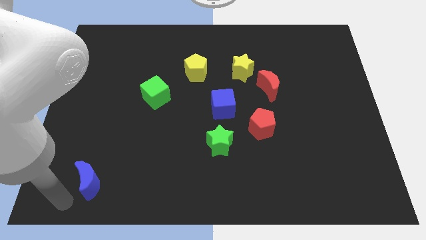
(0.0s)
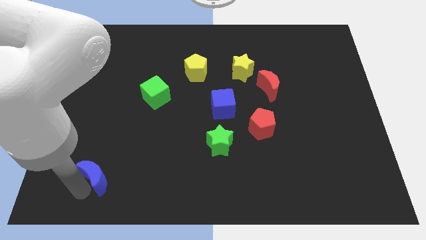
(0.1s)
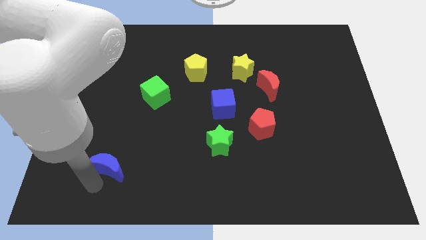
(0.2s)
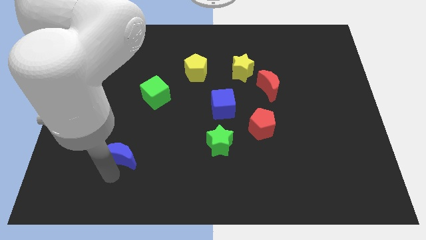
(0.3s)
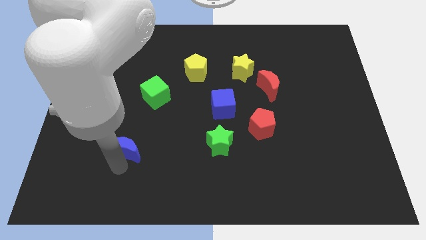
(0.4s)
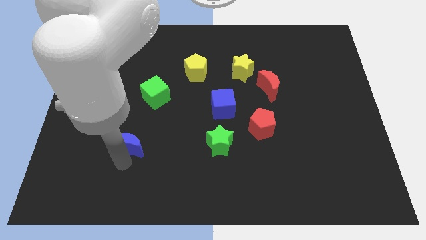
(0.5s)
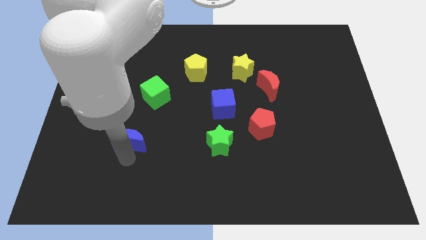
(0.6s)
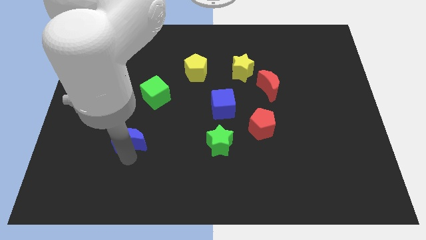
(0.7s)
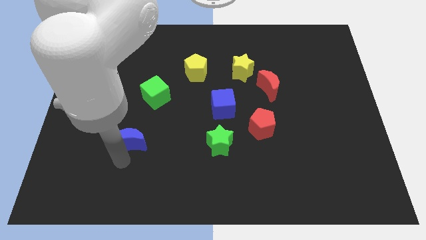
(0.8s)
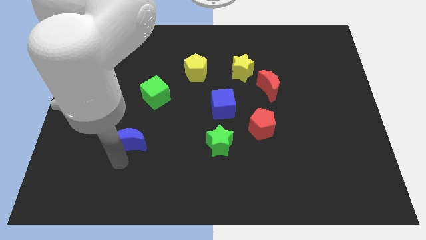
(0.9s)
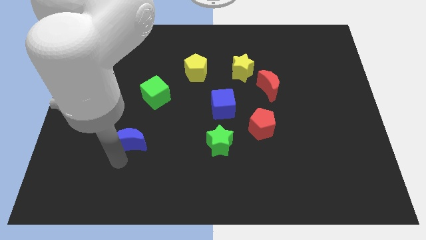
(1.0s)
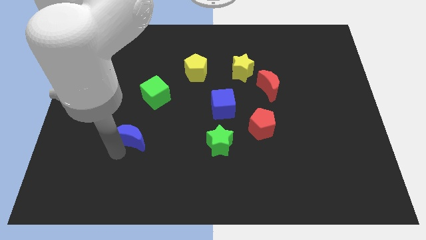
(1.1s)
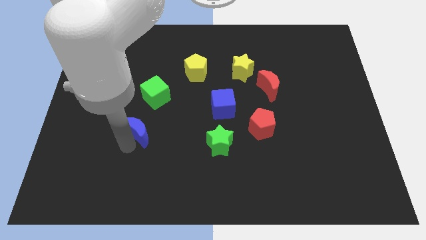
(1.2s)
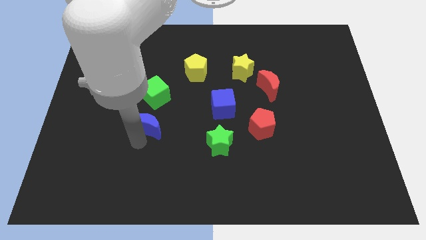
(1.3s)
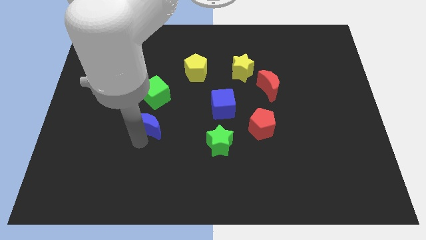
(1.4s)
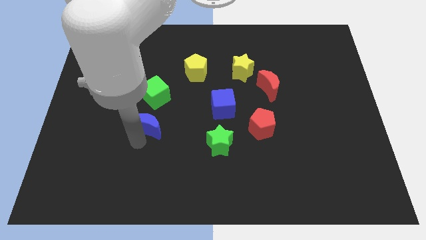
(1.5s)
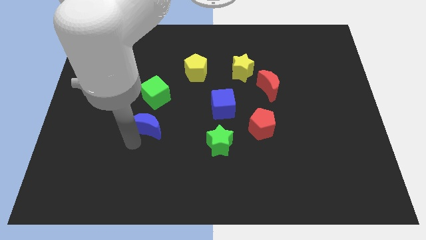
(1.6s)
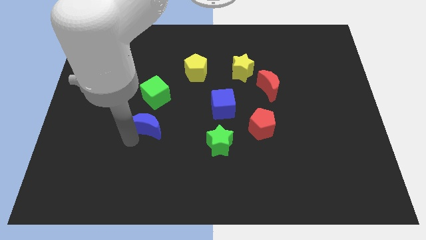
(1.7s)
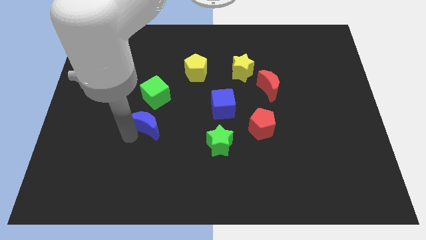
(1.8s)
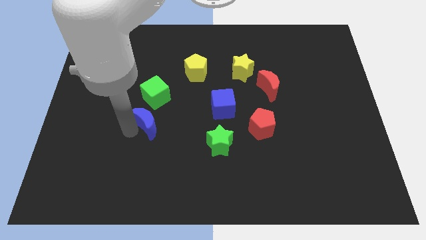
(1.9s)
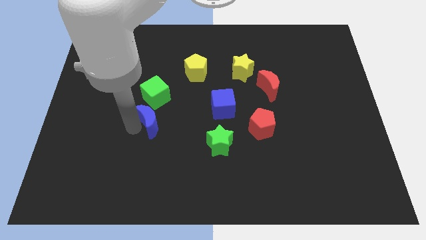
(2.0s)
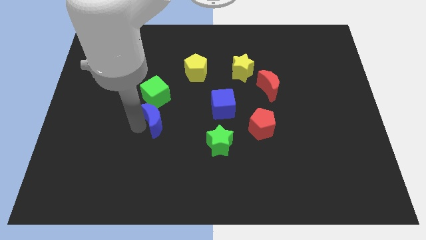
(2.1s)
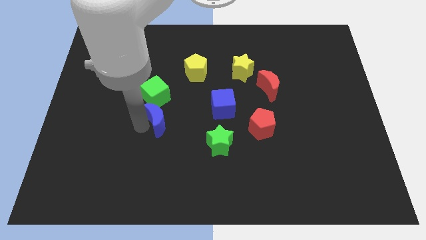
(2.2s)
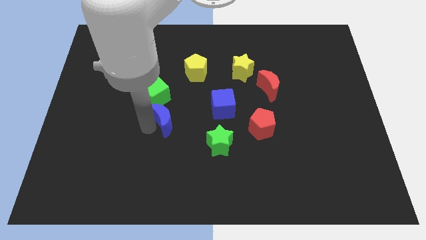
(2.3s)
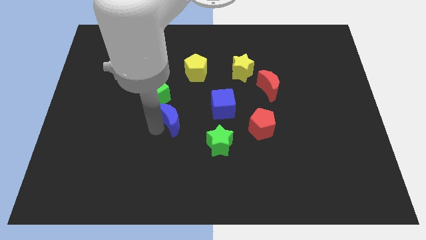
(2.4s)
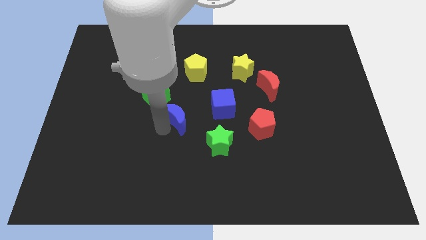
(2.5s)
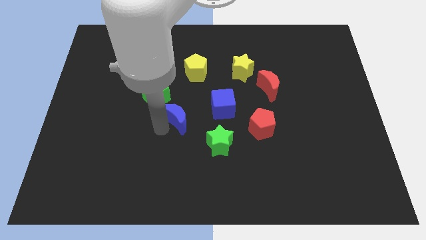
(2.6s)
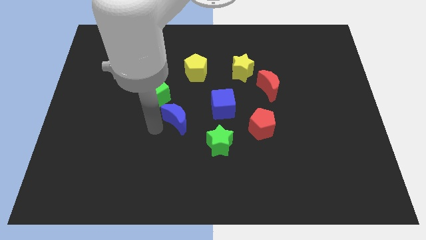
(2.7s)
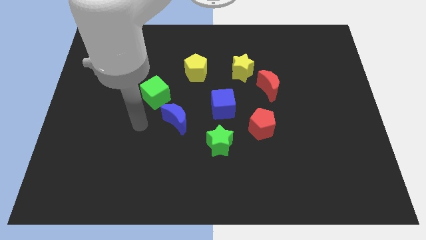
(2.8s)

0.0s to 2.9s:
move the blue crescent to the bottom right of the green cube

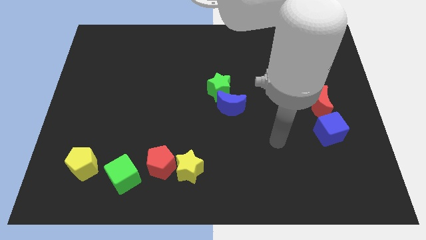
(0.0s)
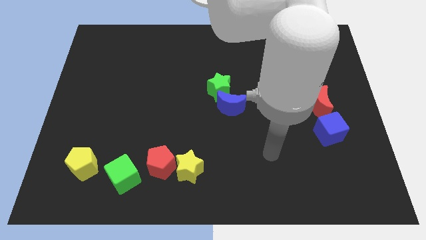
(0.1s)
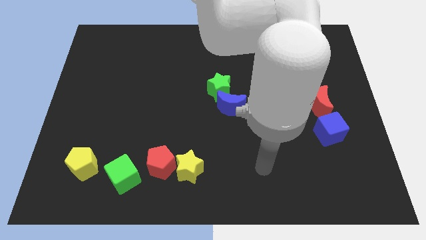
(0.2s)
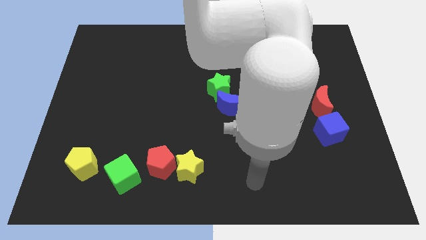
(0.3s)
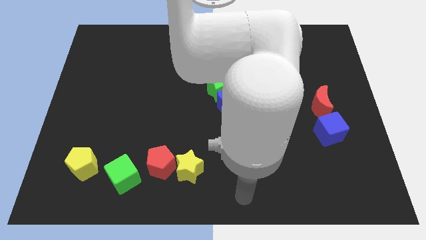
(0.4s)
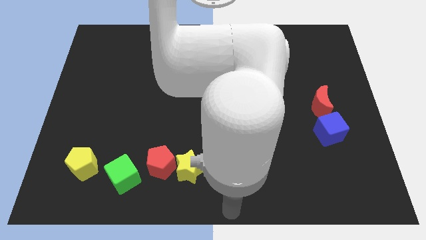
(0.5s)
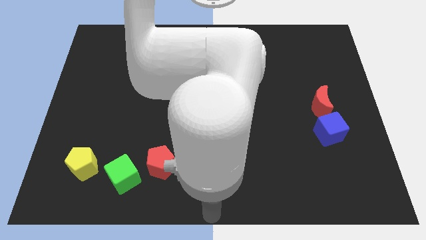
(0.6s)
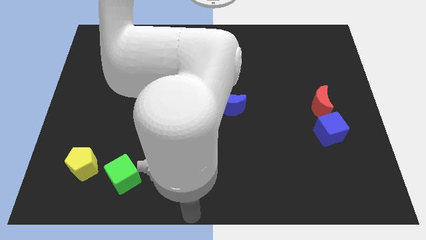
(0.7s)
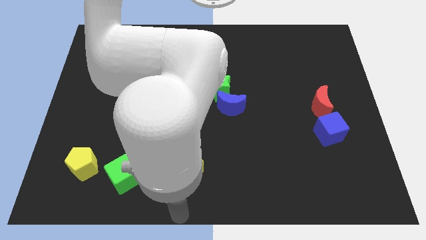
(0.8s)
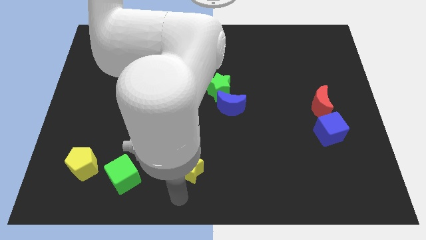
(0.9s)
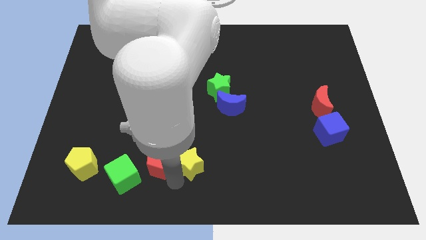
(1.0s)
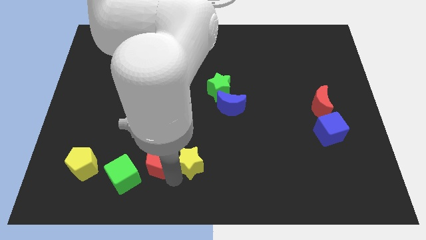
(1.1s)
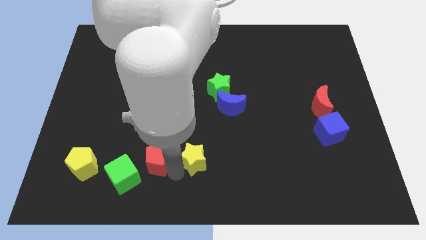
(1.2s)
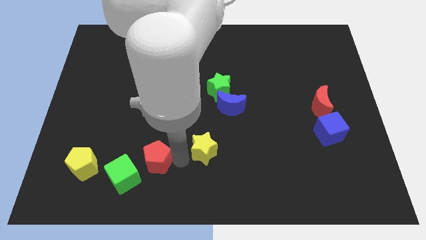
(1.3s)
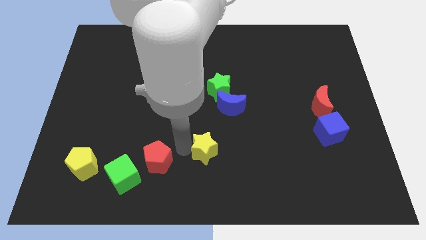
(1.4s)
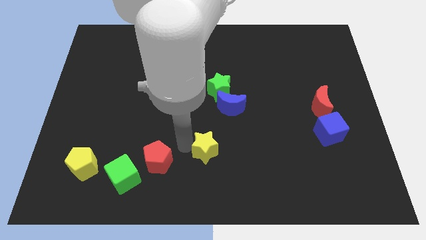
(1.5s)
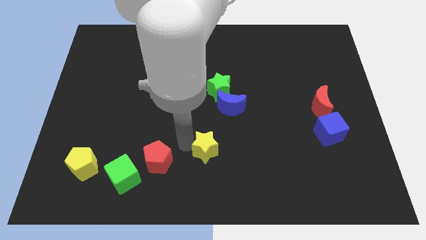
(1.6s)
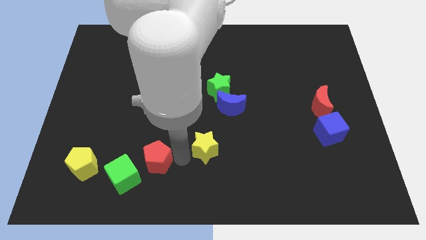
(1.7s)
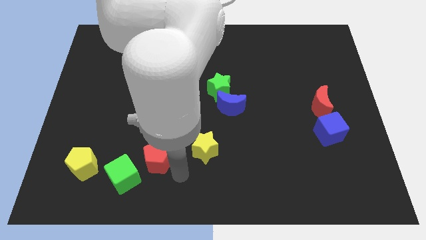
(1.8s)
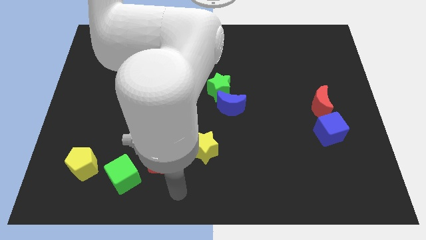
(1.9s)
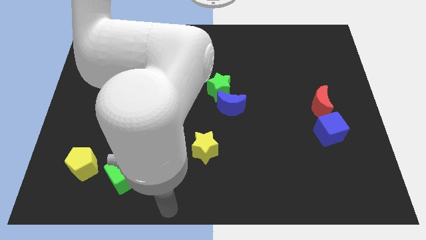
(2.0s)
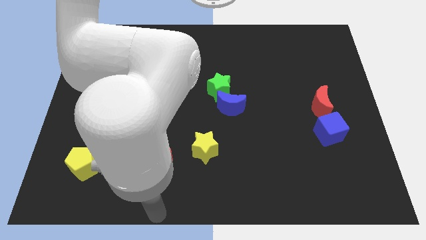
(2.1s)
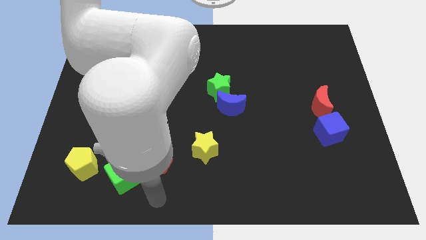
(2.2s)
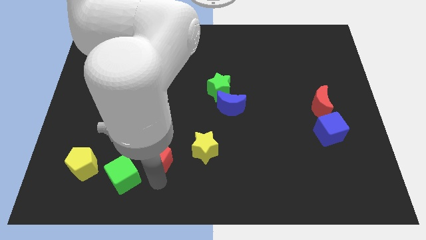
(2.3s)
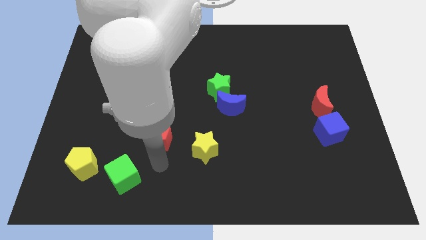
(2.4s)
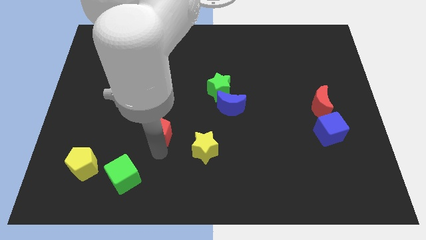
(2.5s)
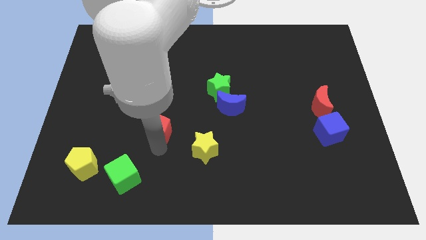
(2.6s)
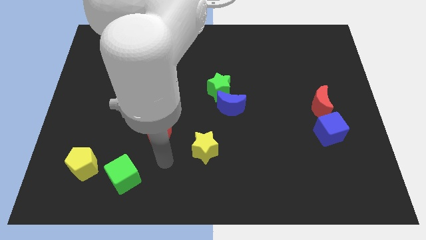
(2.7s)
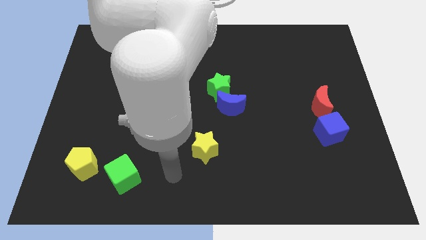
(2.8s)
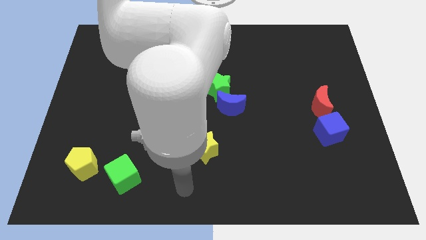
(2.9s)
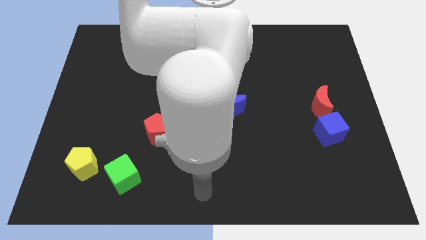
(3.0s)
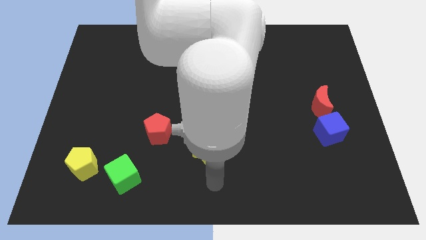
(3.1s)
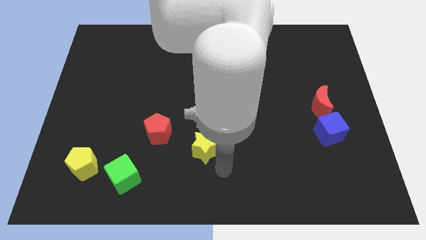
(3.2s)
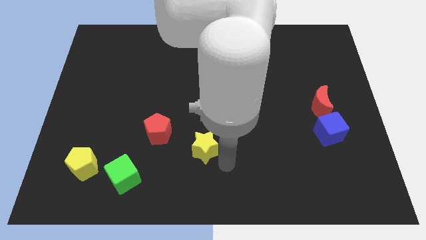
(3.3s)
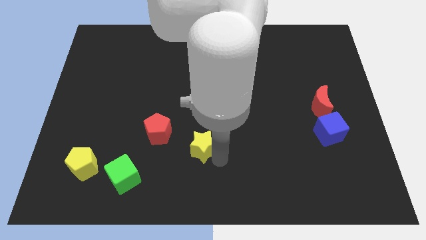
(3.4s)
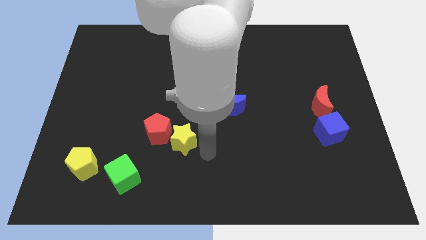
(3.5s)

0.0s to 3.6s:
separate the yellow star from the red pentagon

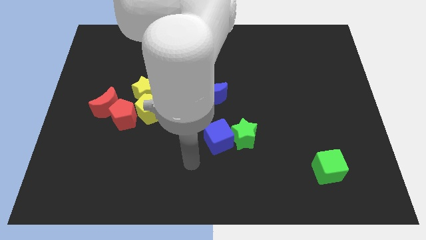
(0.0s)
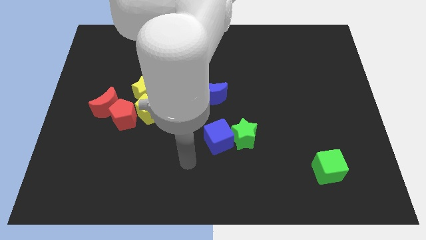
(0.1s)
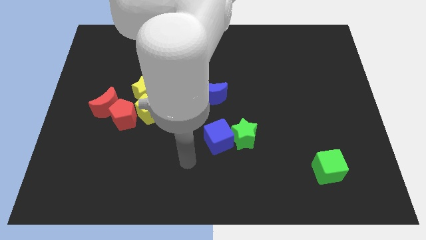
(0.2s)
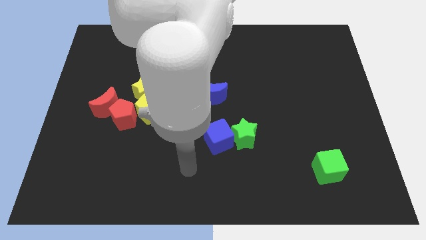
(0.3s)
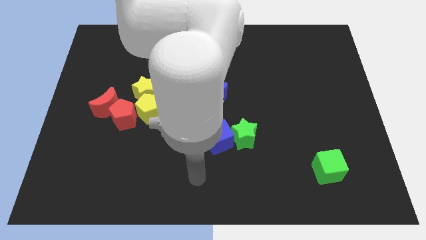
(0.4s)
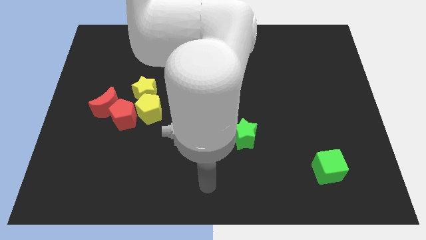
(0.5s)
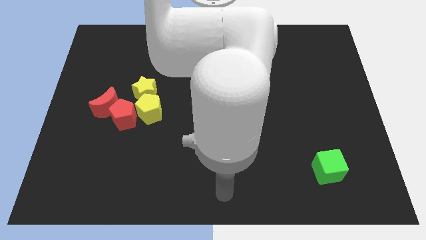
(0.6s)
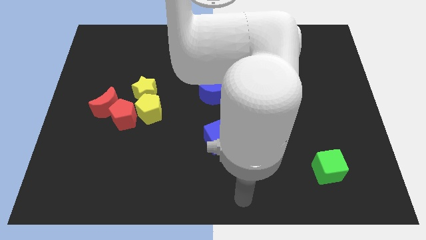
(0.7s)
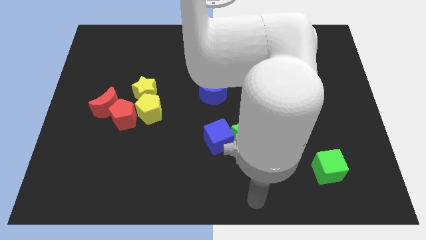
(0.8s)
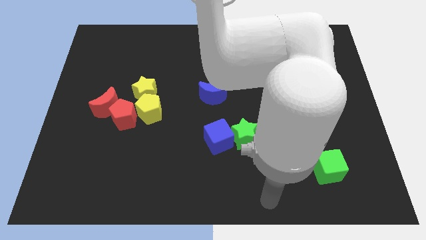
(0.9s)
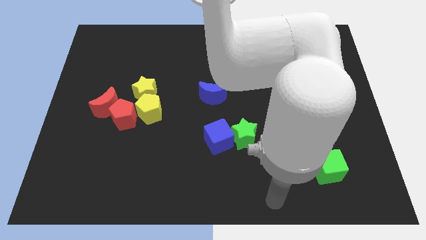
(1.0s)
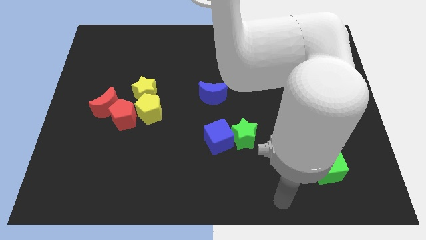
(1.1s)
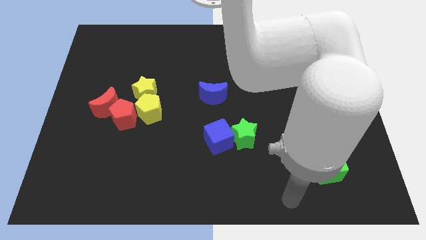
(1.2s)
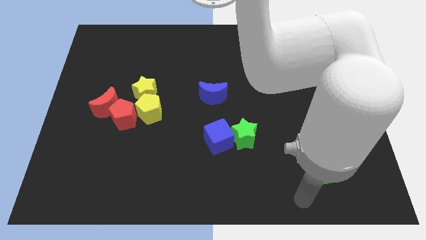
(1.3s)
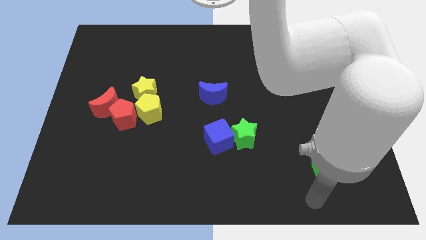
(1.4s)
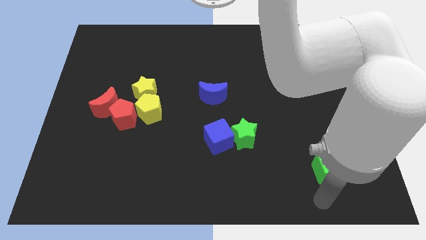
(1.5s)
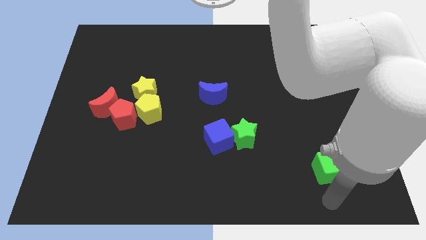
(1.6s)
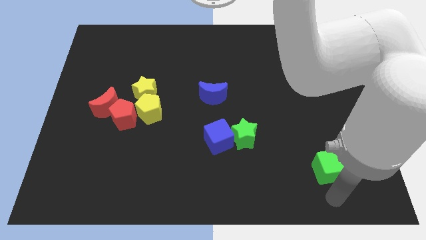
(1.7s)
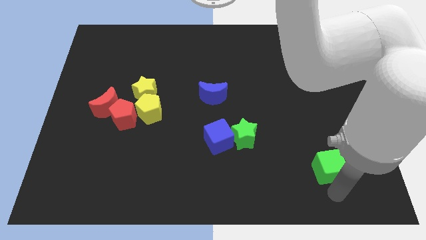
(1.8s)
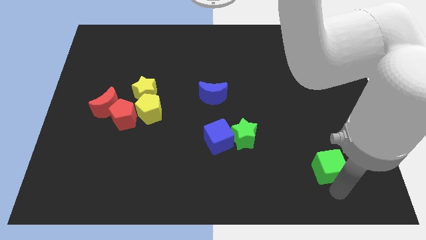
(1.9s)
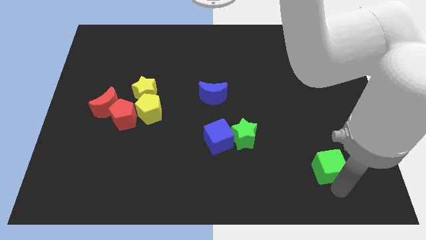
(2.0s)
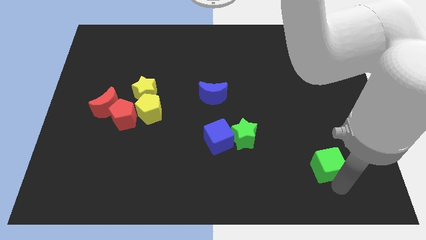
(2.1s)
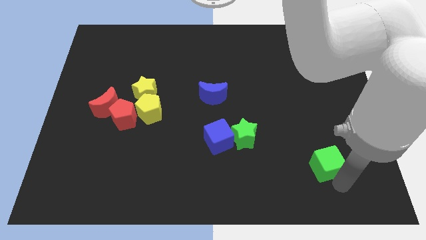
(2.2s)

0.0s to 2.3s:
touch the bottom of green cube
